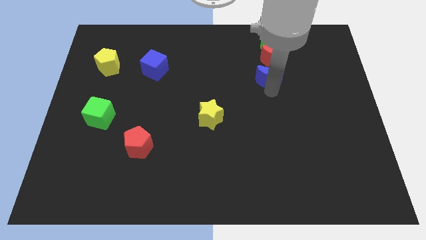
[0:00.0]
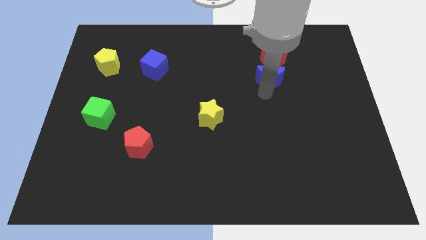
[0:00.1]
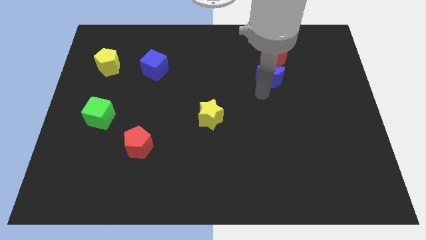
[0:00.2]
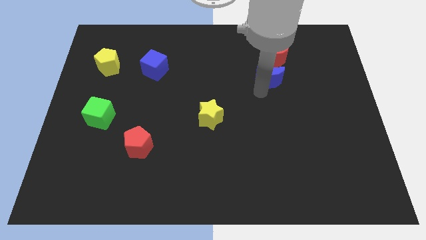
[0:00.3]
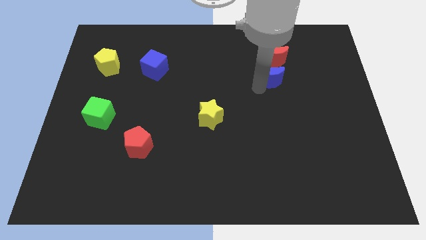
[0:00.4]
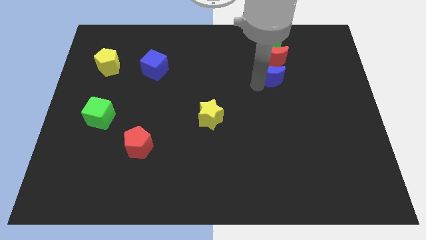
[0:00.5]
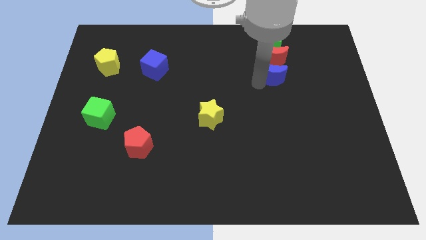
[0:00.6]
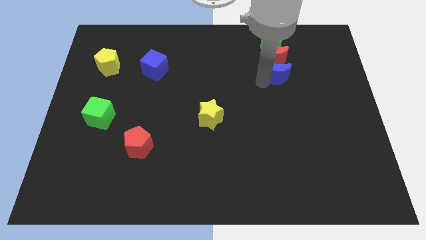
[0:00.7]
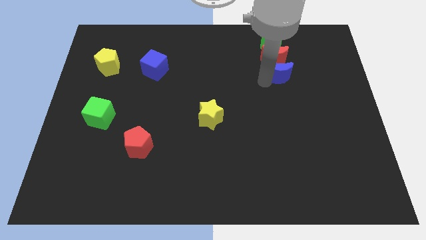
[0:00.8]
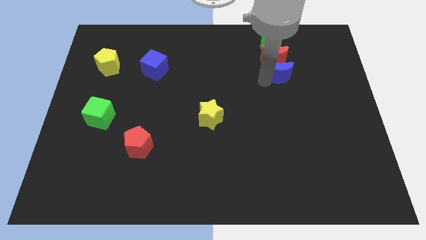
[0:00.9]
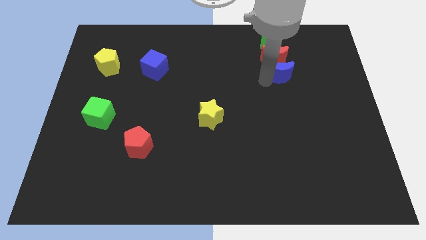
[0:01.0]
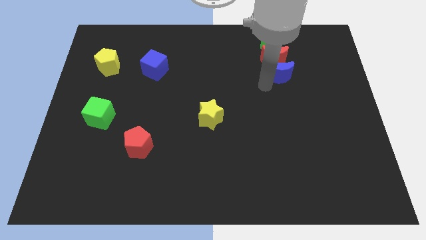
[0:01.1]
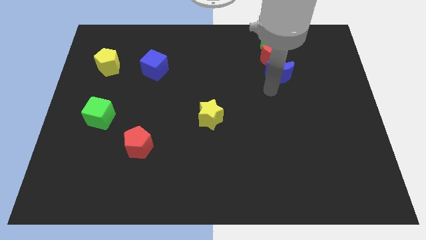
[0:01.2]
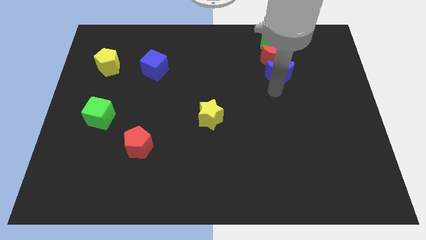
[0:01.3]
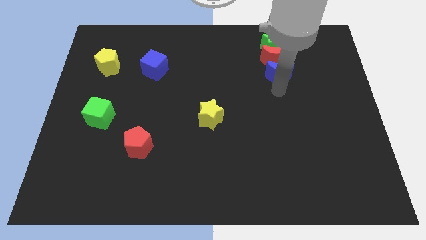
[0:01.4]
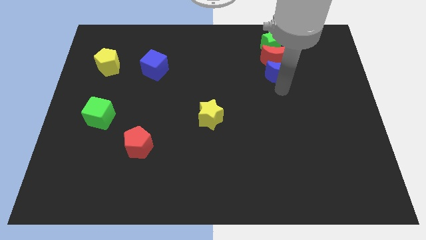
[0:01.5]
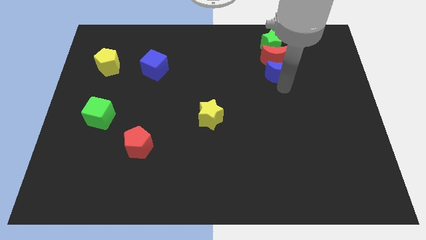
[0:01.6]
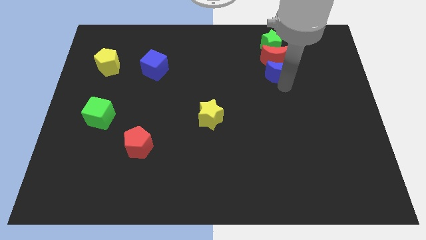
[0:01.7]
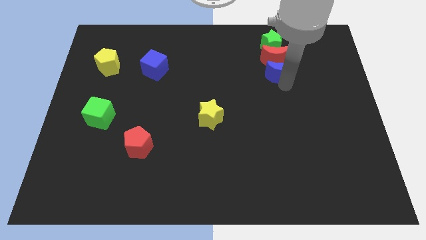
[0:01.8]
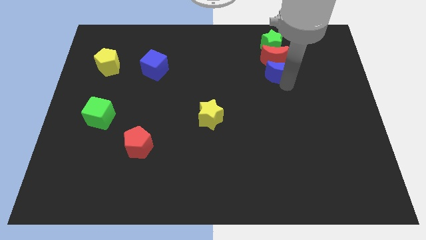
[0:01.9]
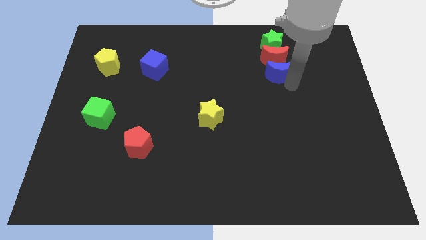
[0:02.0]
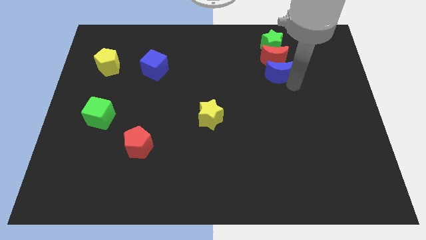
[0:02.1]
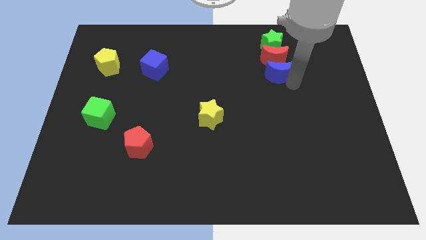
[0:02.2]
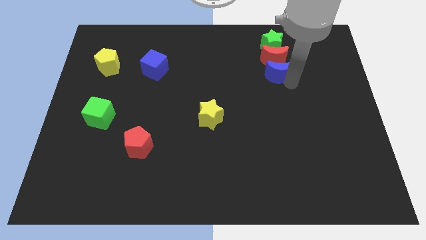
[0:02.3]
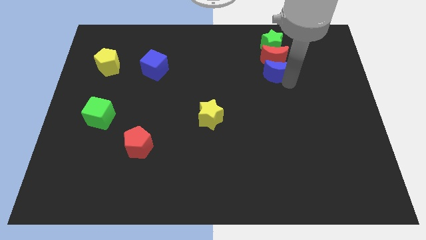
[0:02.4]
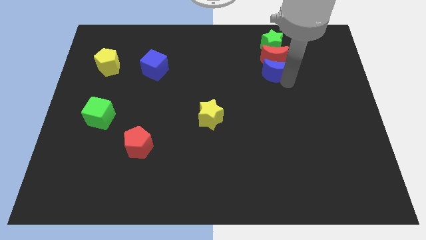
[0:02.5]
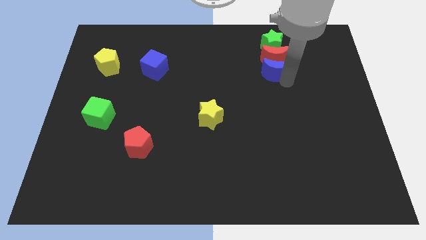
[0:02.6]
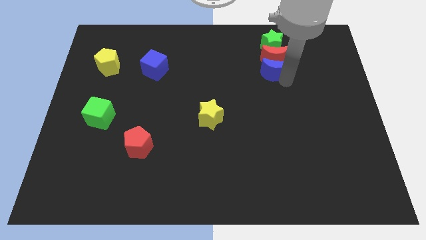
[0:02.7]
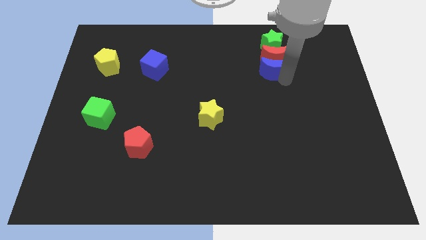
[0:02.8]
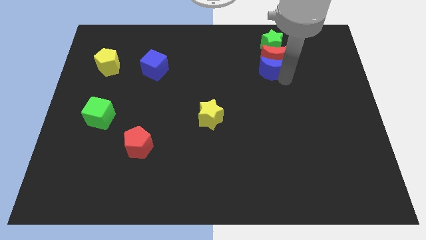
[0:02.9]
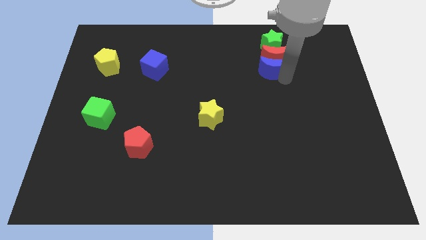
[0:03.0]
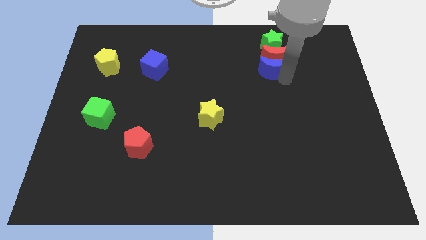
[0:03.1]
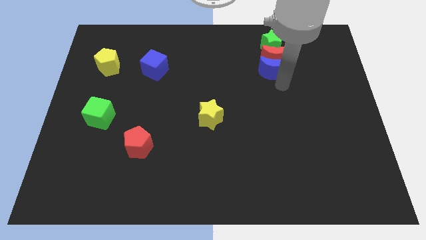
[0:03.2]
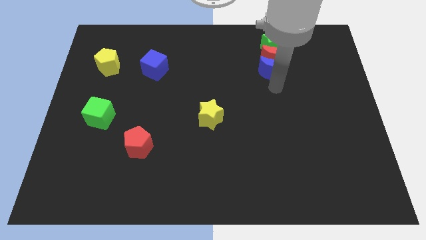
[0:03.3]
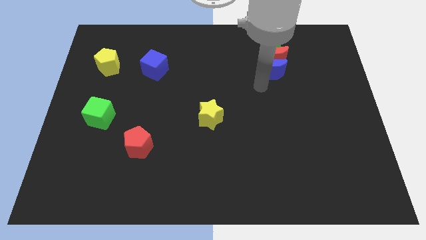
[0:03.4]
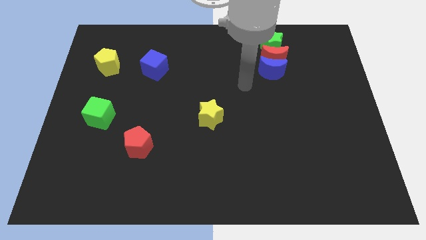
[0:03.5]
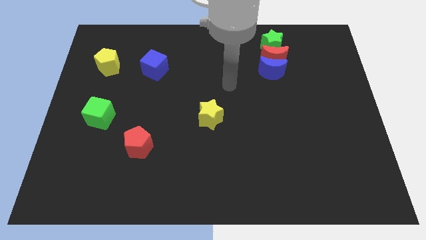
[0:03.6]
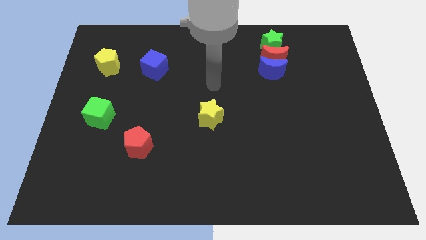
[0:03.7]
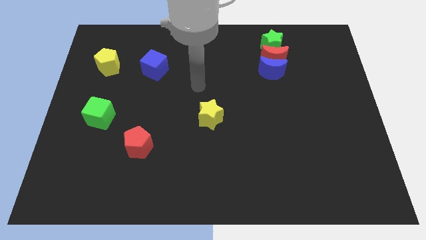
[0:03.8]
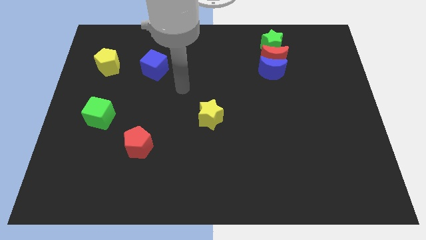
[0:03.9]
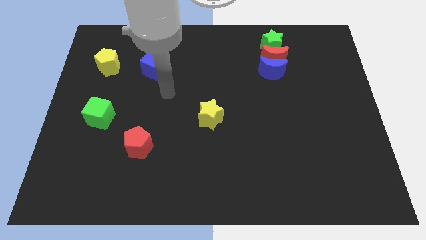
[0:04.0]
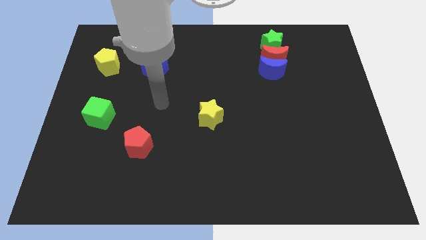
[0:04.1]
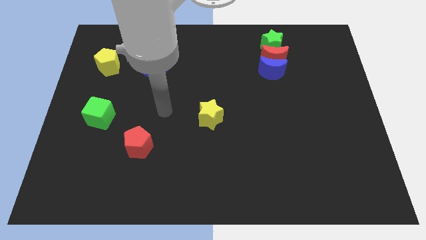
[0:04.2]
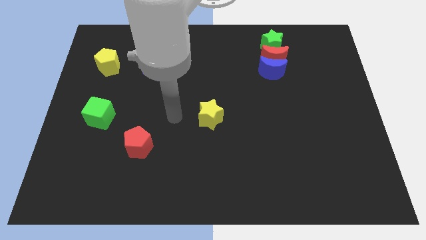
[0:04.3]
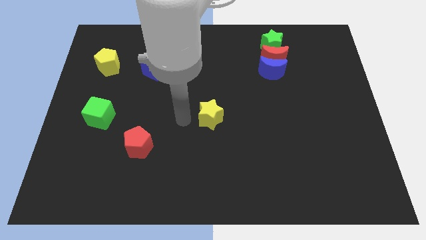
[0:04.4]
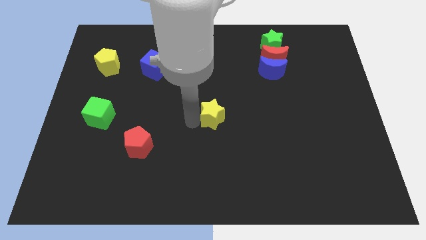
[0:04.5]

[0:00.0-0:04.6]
move your arm towards the yellow star

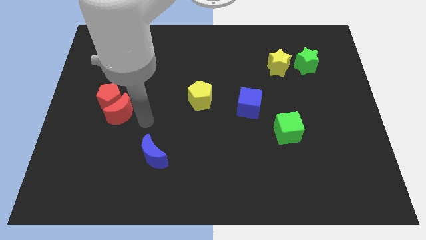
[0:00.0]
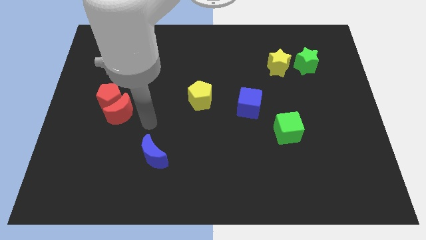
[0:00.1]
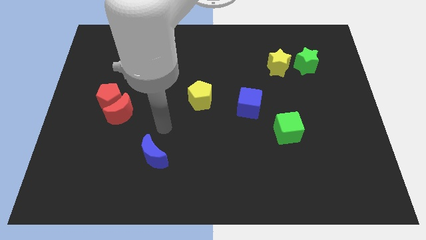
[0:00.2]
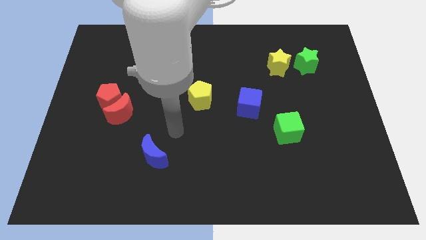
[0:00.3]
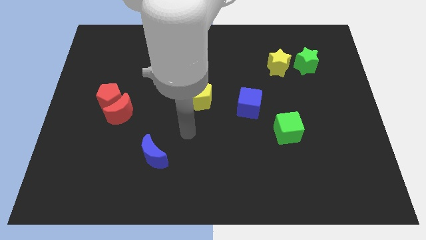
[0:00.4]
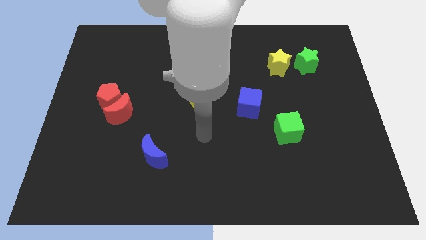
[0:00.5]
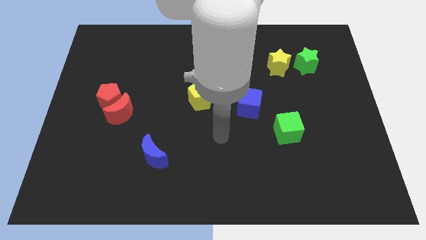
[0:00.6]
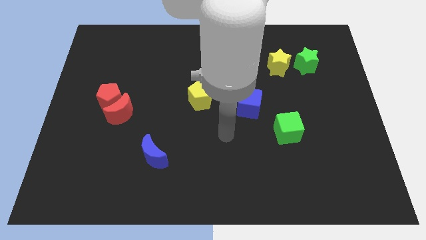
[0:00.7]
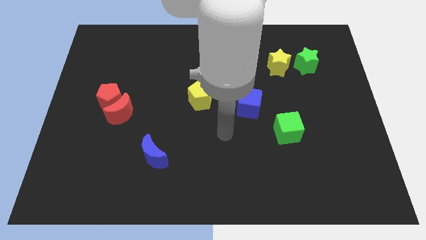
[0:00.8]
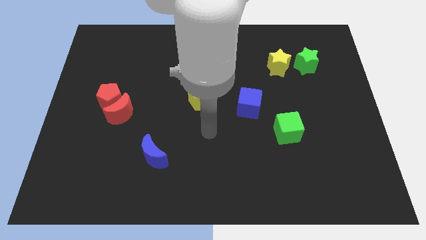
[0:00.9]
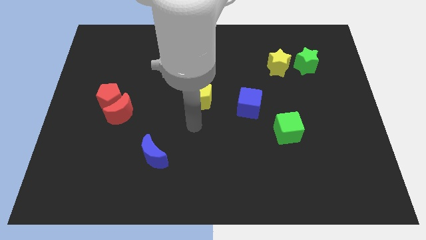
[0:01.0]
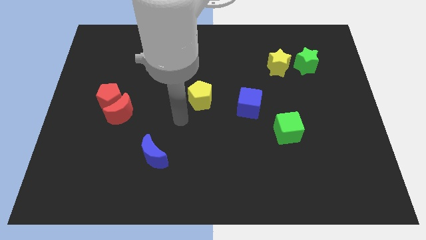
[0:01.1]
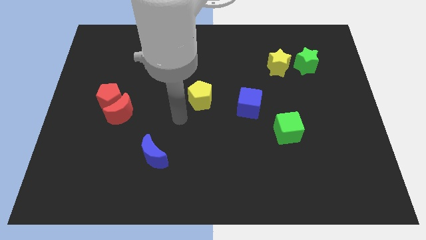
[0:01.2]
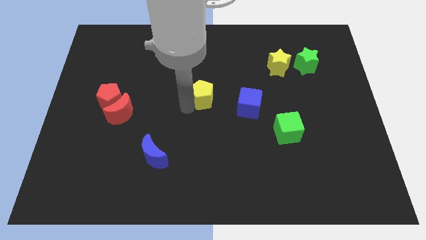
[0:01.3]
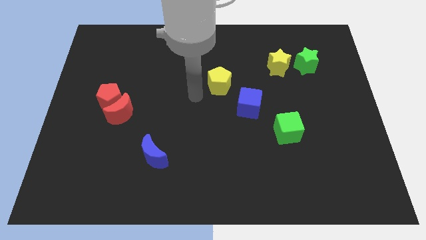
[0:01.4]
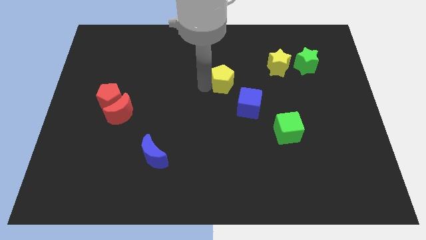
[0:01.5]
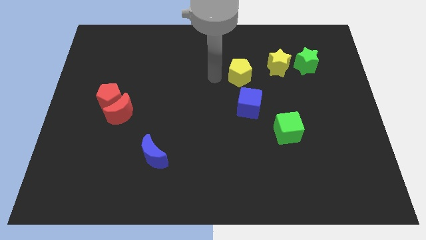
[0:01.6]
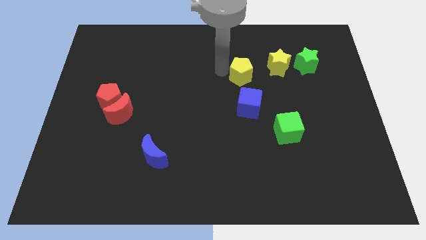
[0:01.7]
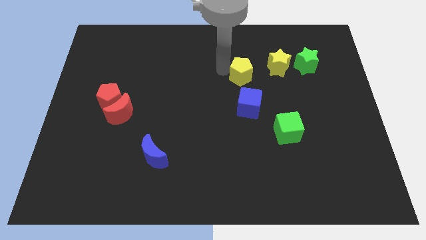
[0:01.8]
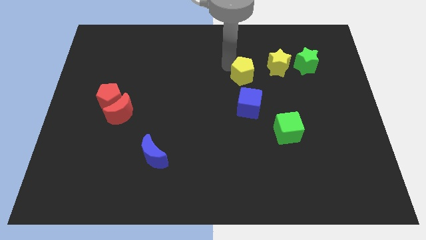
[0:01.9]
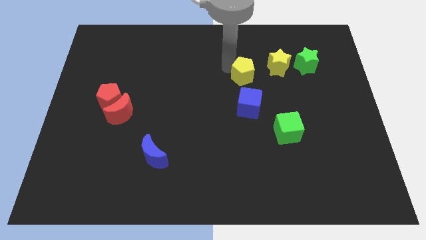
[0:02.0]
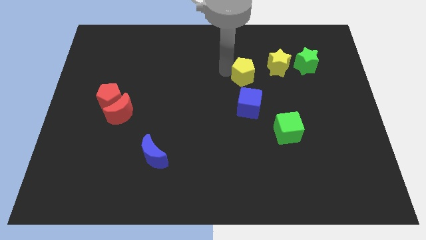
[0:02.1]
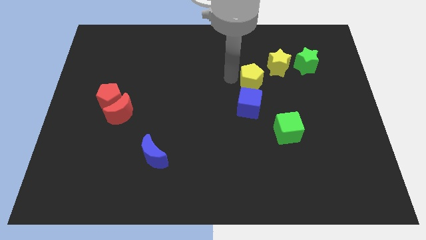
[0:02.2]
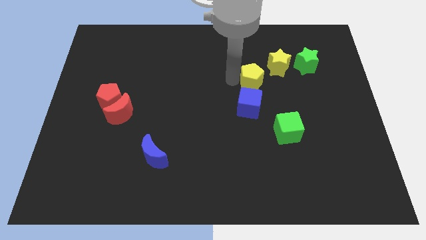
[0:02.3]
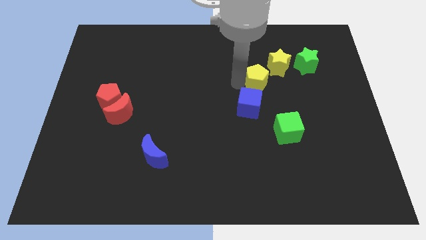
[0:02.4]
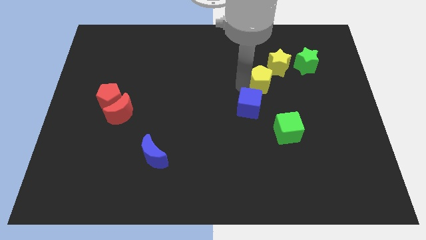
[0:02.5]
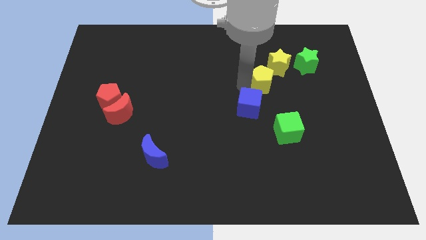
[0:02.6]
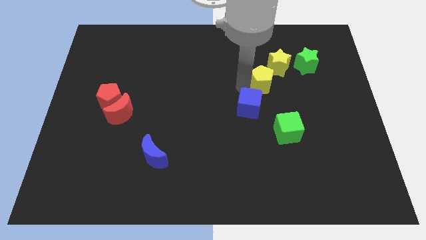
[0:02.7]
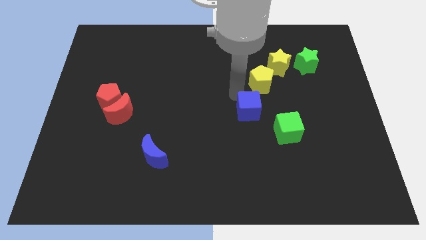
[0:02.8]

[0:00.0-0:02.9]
put the yellow pentagon at the bottom left of the yellow star

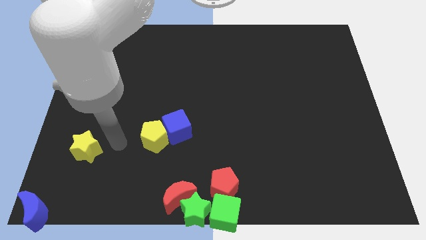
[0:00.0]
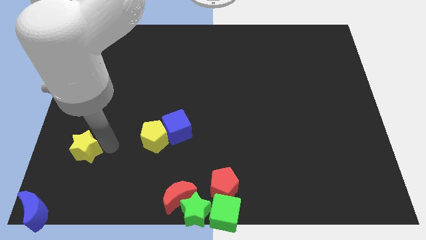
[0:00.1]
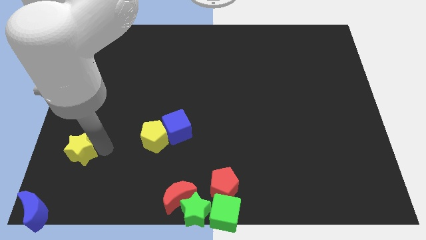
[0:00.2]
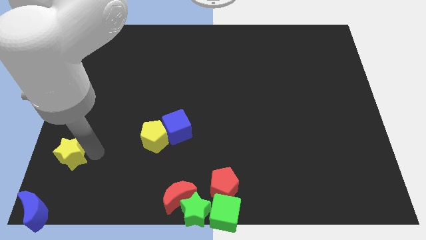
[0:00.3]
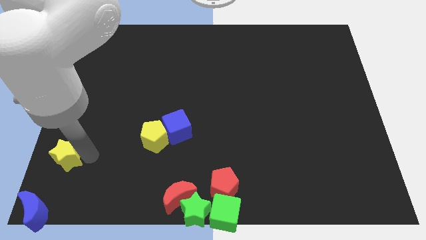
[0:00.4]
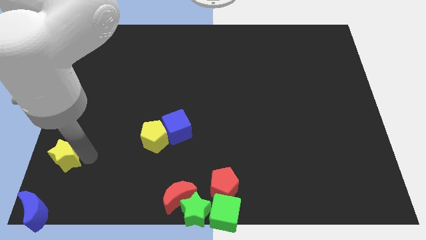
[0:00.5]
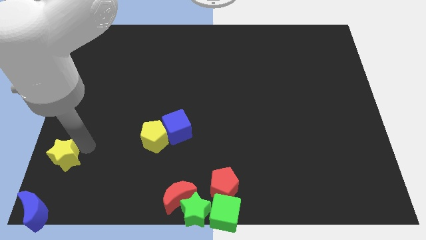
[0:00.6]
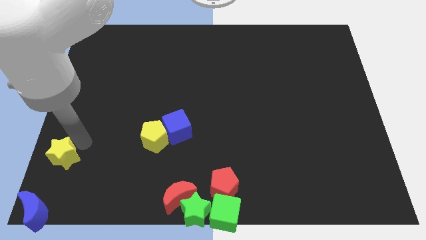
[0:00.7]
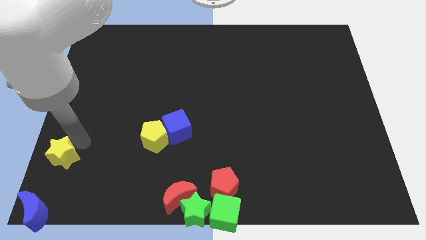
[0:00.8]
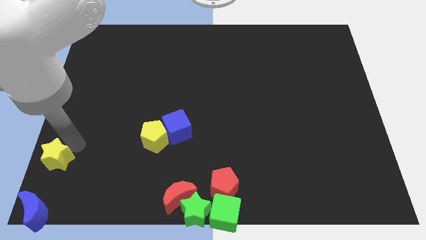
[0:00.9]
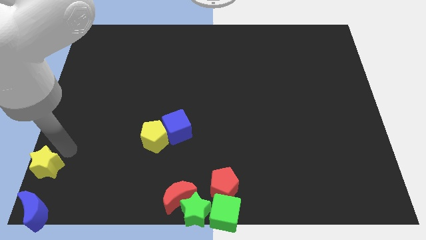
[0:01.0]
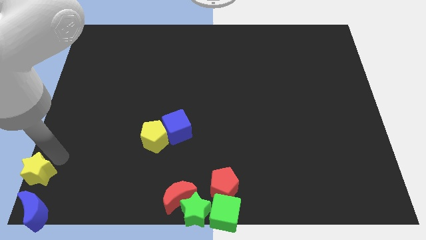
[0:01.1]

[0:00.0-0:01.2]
move the yellow star above the blue moon

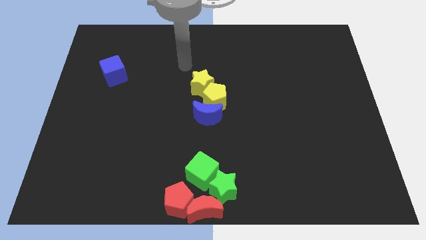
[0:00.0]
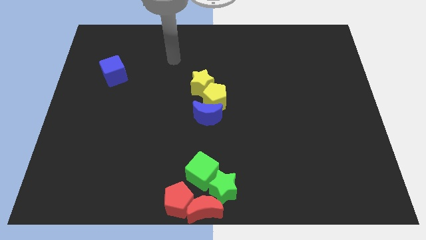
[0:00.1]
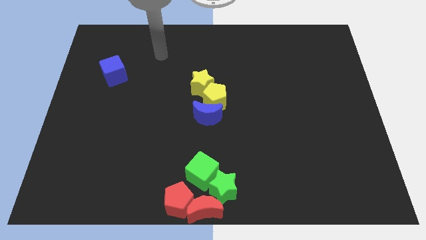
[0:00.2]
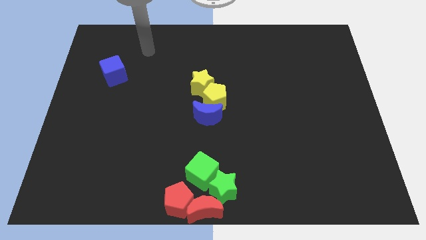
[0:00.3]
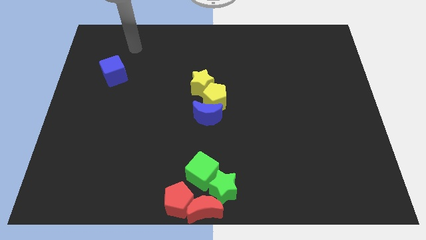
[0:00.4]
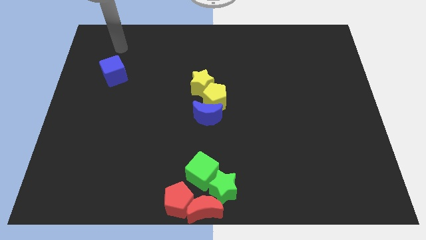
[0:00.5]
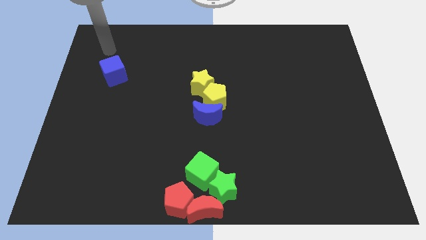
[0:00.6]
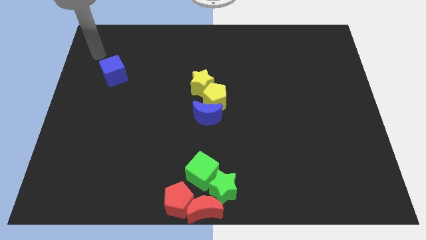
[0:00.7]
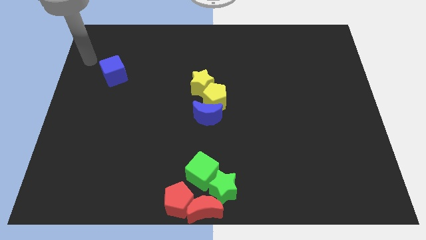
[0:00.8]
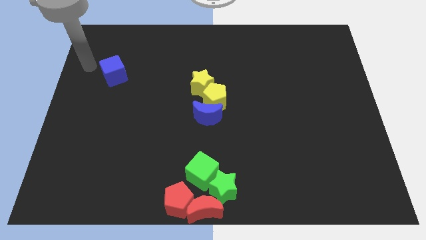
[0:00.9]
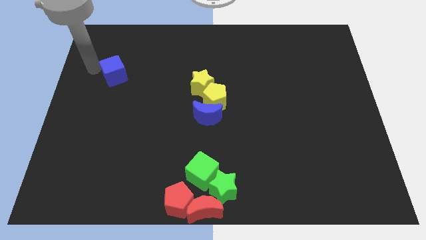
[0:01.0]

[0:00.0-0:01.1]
move your arm to the top of blue cube
